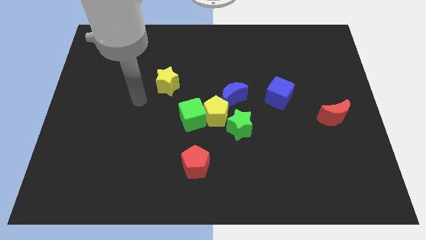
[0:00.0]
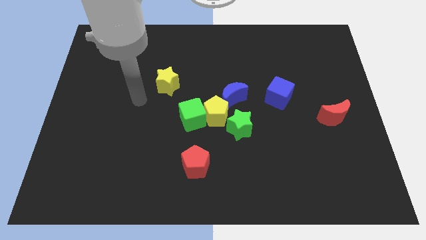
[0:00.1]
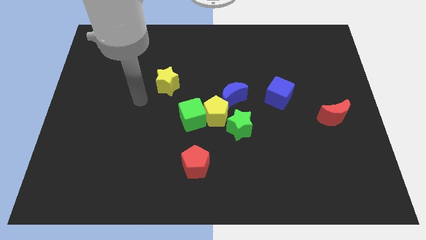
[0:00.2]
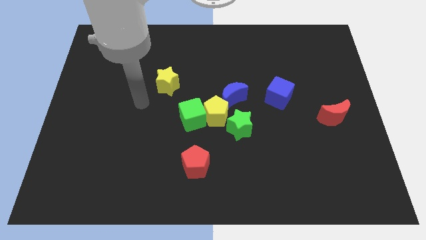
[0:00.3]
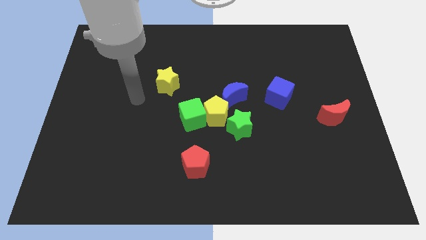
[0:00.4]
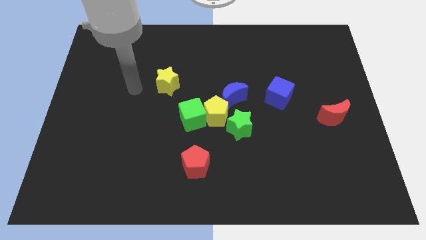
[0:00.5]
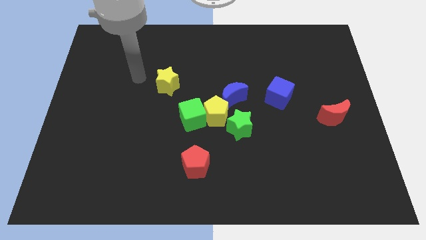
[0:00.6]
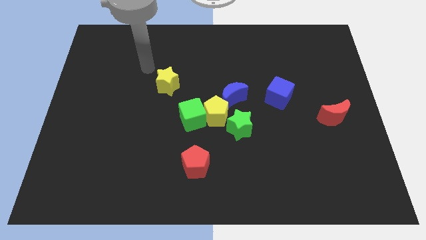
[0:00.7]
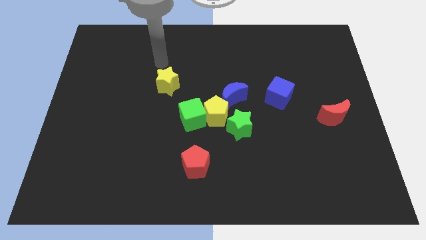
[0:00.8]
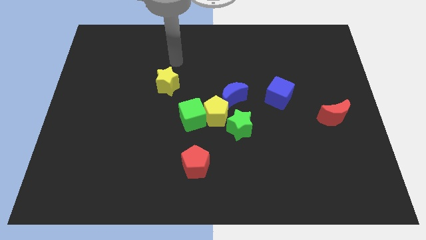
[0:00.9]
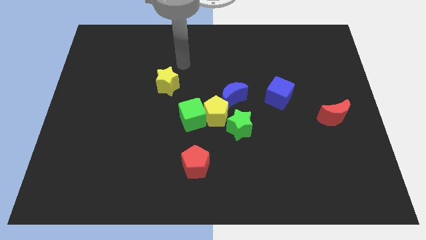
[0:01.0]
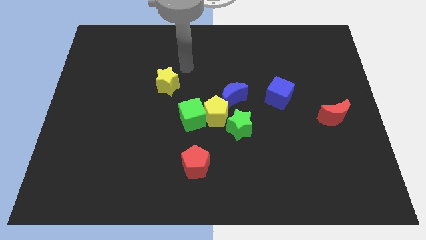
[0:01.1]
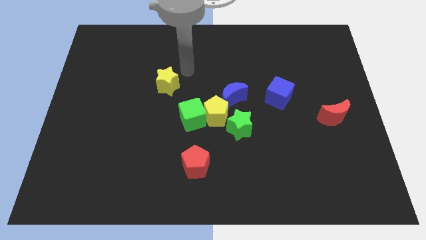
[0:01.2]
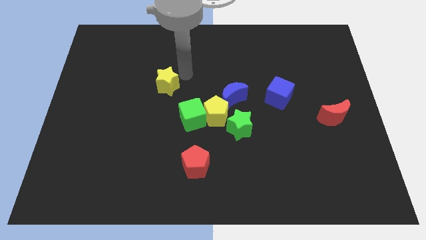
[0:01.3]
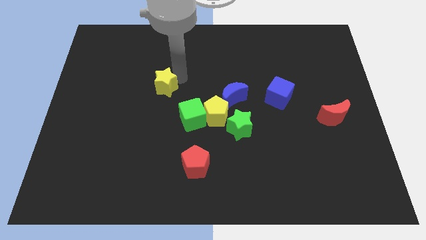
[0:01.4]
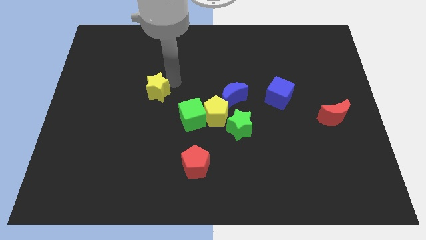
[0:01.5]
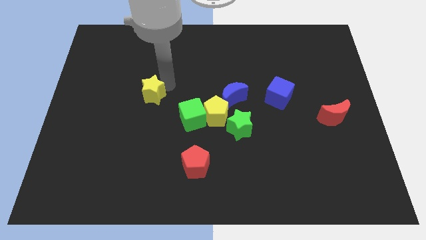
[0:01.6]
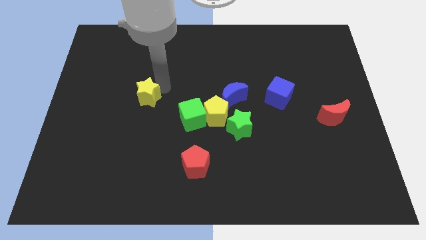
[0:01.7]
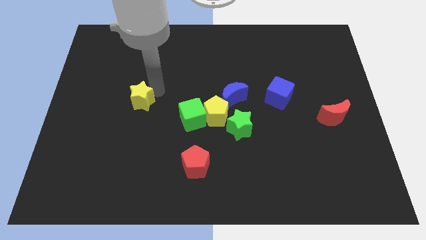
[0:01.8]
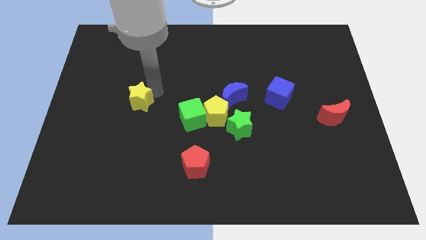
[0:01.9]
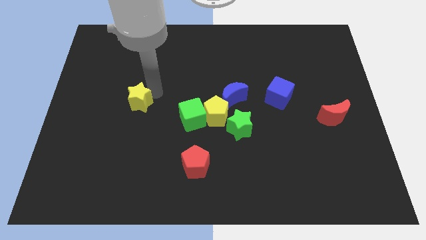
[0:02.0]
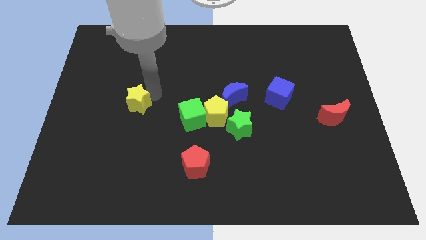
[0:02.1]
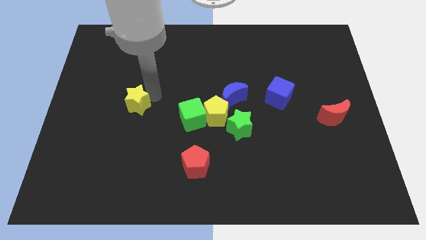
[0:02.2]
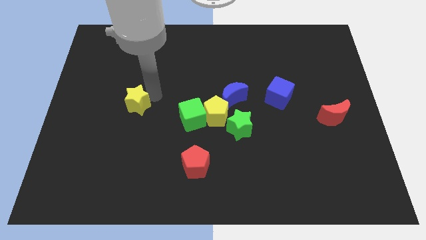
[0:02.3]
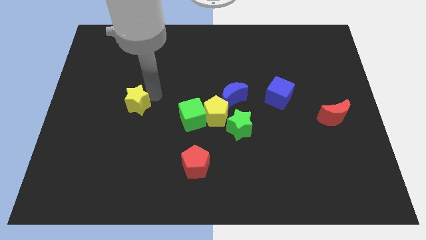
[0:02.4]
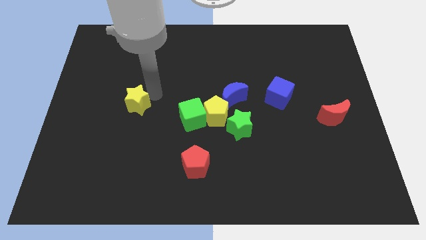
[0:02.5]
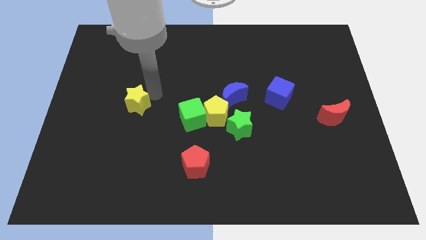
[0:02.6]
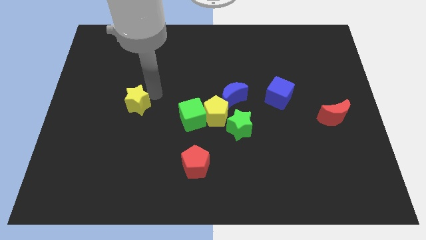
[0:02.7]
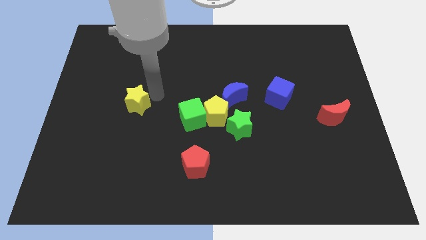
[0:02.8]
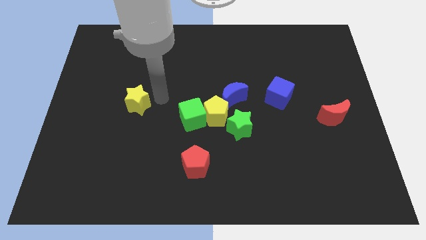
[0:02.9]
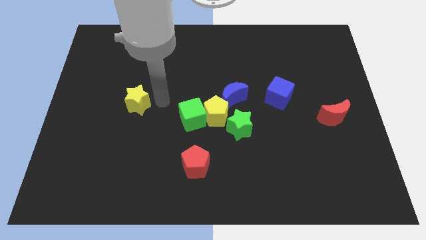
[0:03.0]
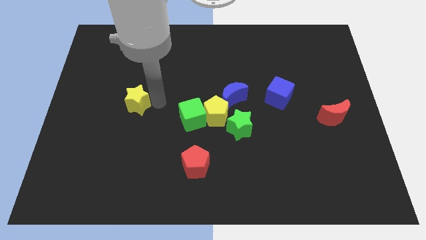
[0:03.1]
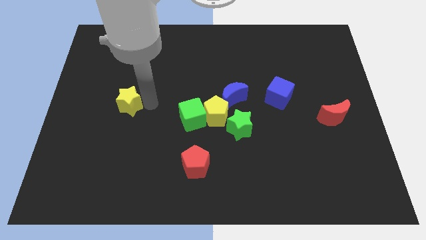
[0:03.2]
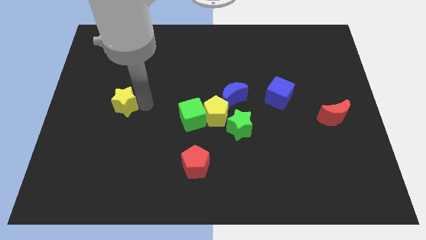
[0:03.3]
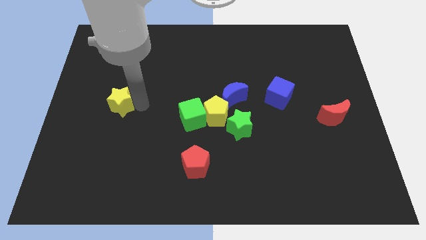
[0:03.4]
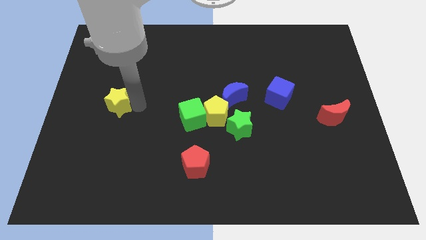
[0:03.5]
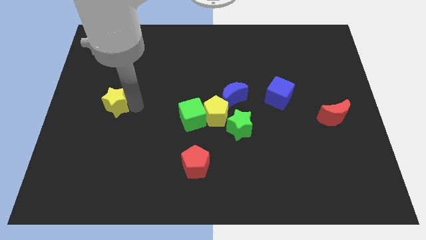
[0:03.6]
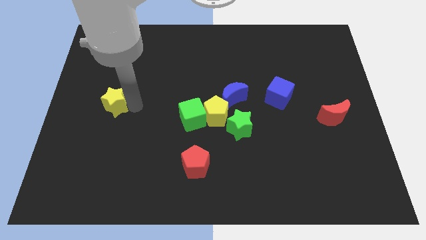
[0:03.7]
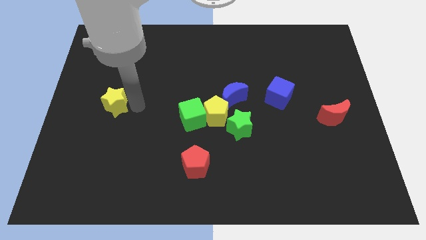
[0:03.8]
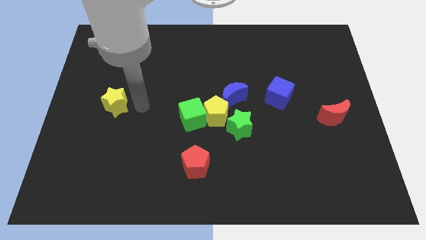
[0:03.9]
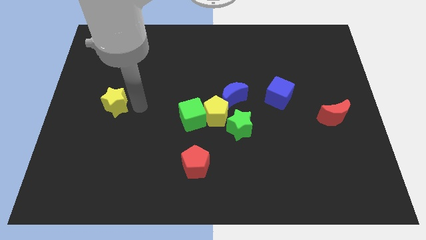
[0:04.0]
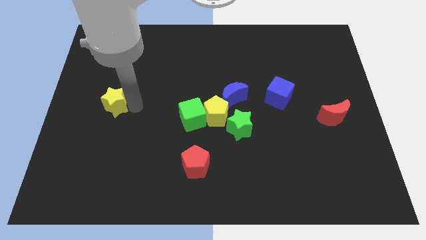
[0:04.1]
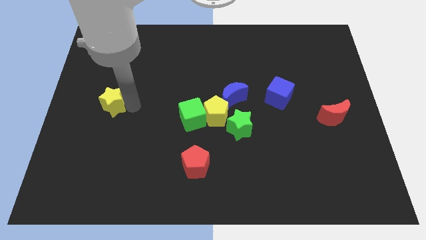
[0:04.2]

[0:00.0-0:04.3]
place the yellow star horizontally to the left side of the blue crescent

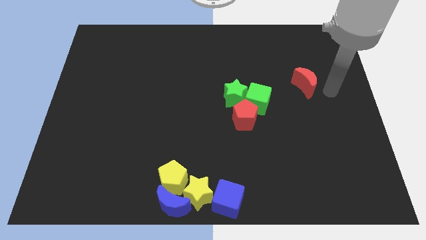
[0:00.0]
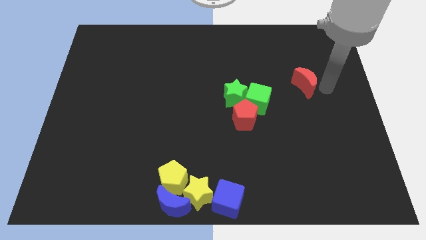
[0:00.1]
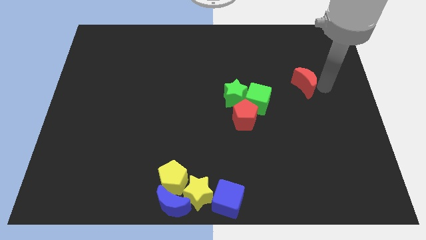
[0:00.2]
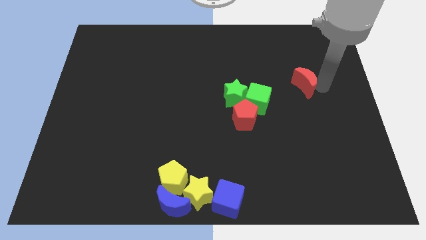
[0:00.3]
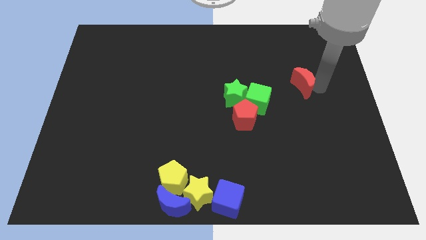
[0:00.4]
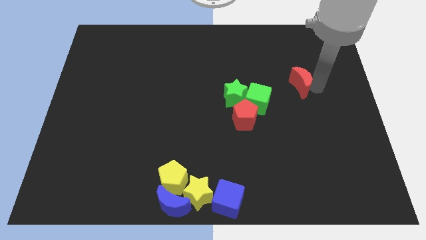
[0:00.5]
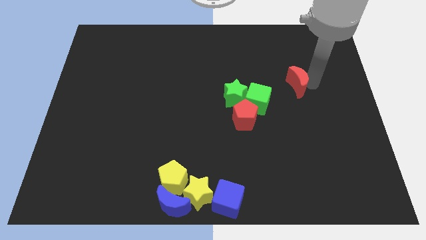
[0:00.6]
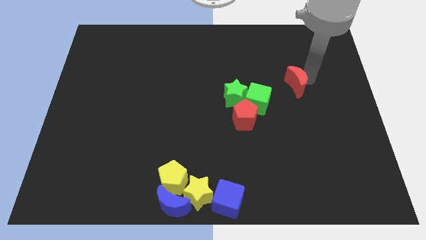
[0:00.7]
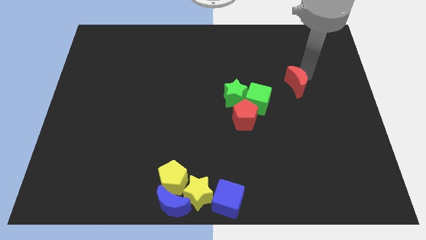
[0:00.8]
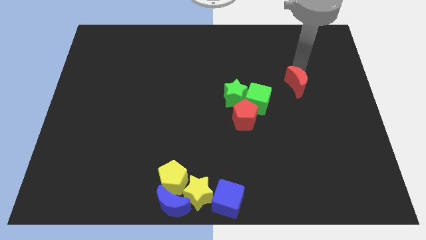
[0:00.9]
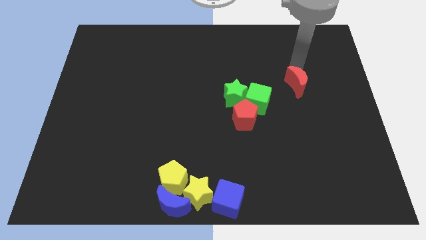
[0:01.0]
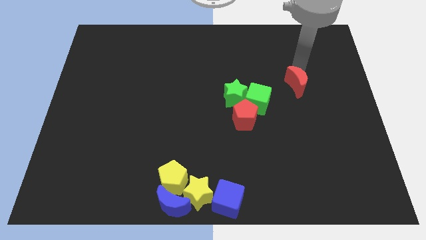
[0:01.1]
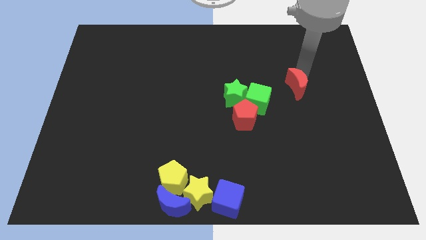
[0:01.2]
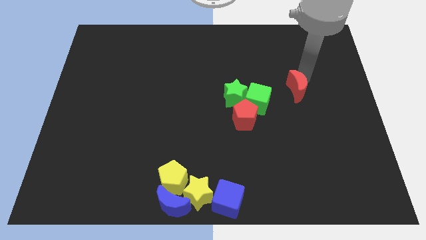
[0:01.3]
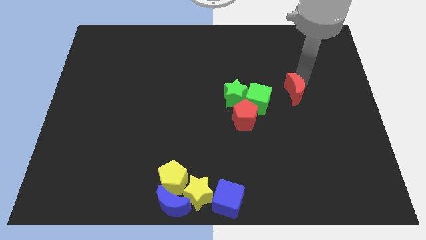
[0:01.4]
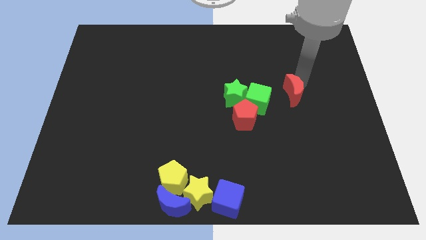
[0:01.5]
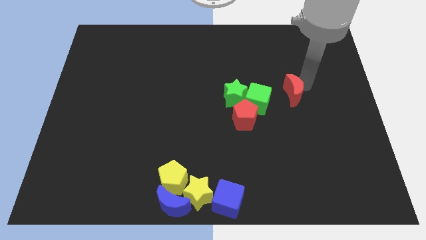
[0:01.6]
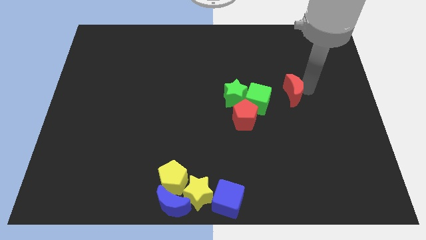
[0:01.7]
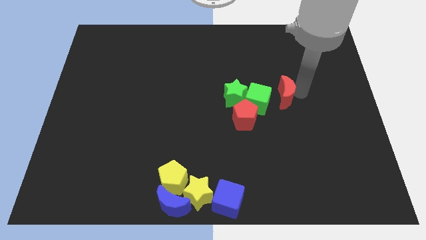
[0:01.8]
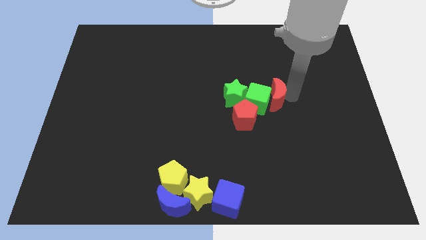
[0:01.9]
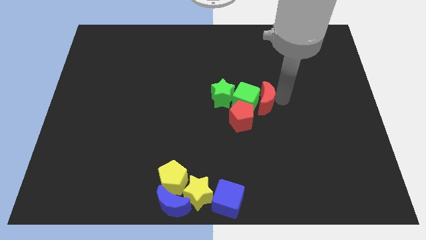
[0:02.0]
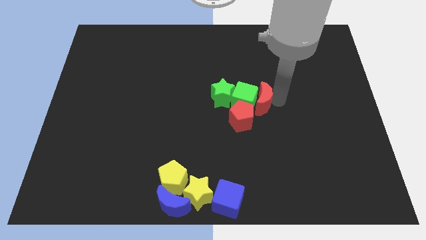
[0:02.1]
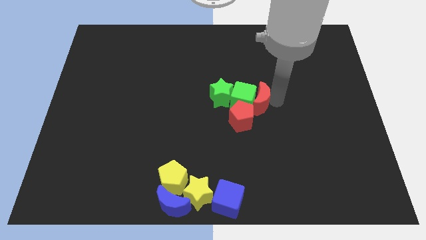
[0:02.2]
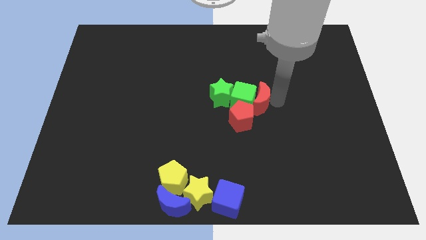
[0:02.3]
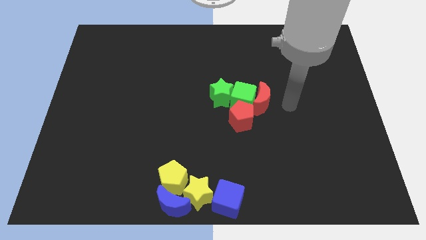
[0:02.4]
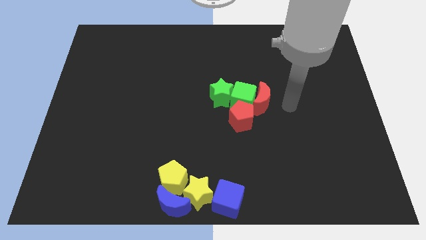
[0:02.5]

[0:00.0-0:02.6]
move the red crescent into both the green blocks and the red pentagon

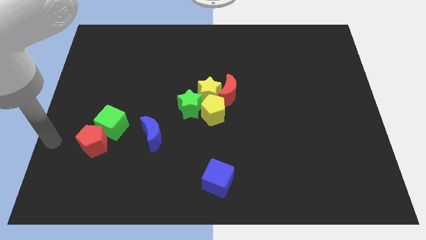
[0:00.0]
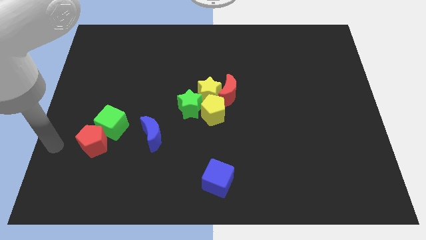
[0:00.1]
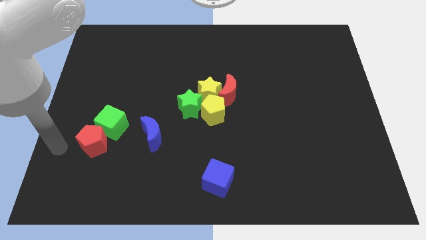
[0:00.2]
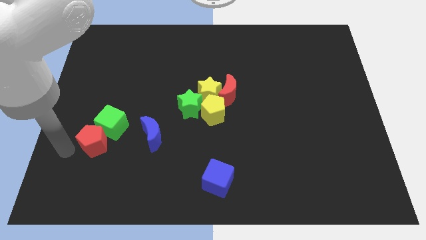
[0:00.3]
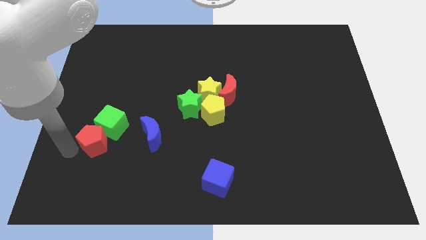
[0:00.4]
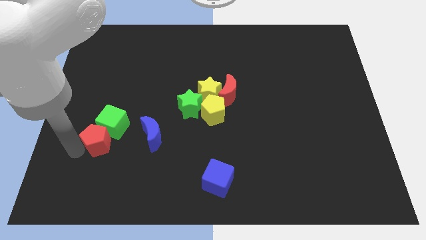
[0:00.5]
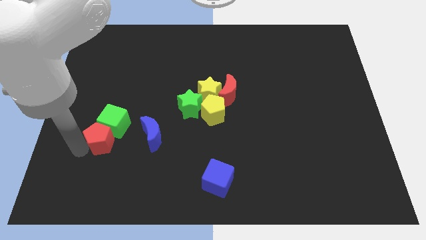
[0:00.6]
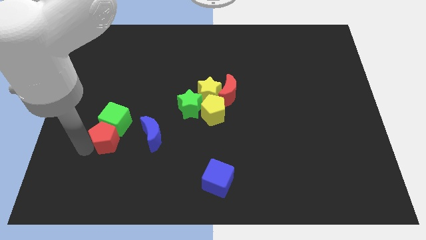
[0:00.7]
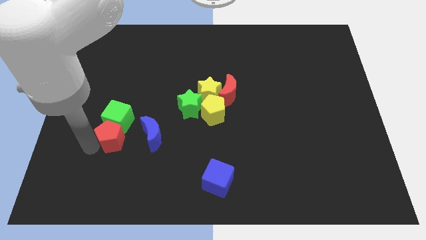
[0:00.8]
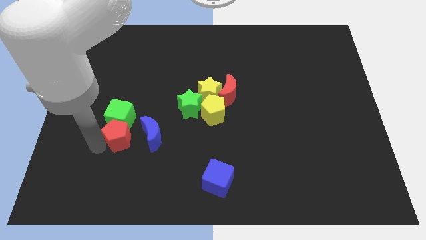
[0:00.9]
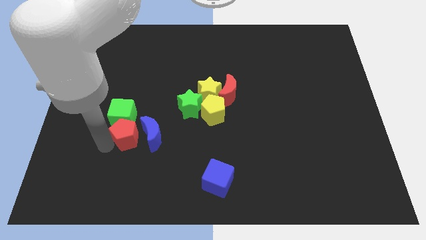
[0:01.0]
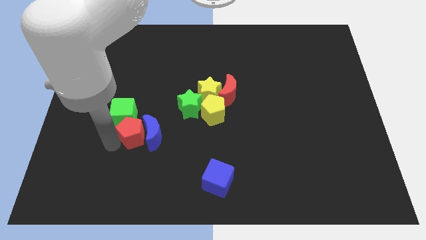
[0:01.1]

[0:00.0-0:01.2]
move the green cube and red pentagon towards the center of the board

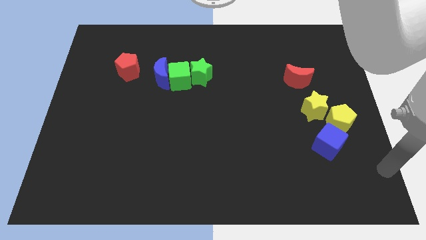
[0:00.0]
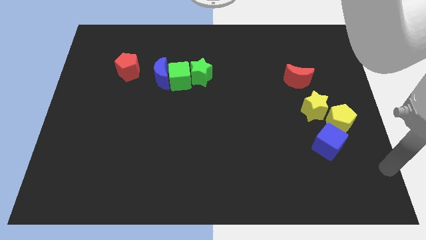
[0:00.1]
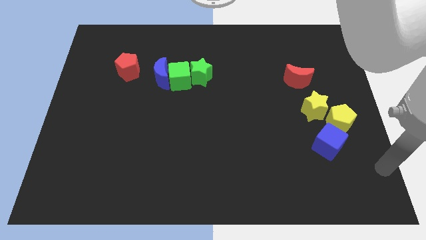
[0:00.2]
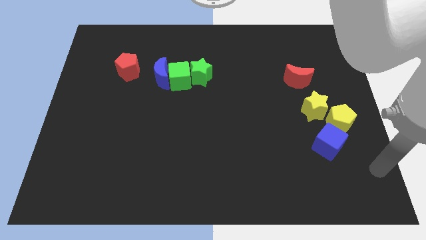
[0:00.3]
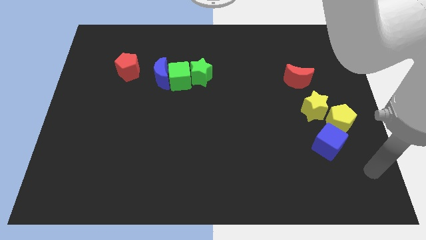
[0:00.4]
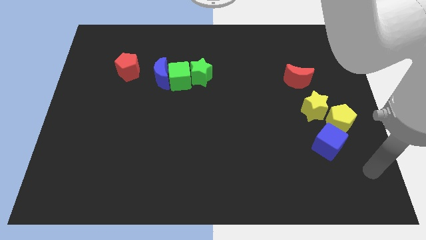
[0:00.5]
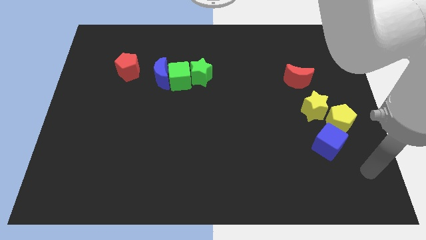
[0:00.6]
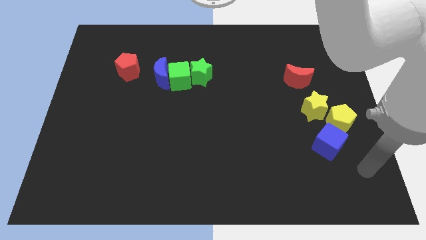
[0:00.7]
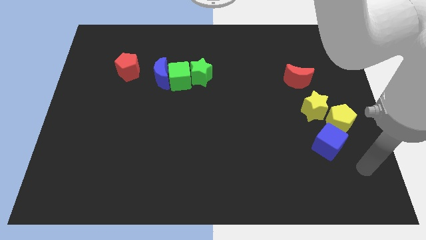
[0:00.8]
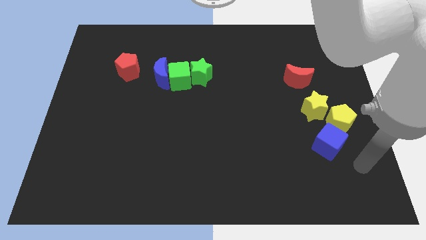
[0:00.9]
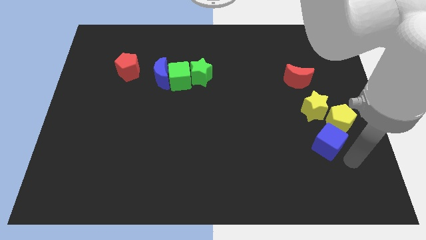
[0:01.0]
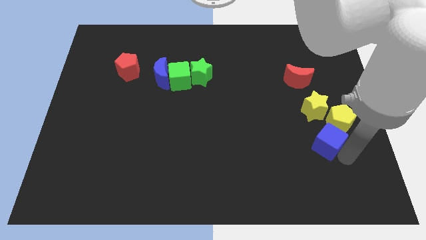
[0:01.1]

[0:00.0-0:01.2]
place your arm close to blue cube
